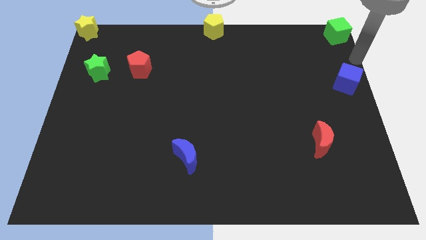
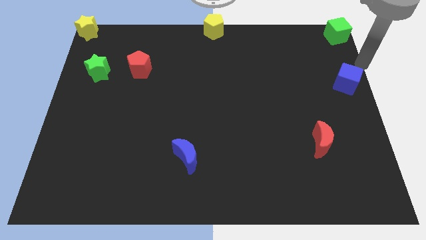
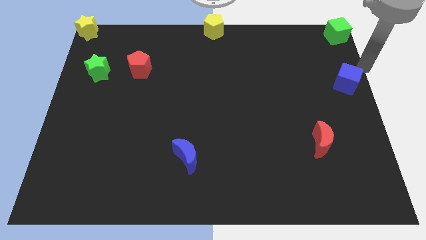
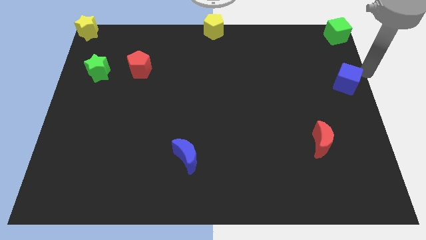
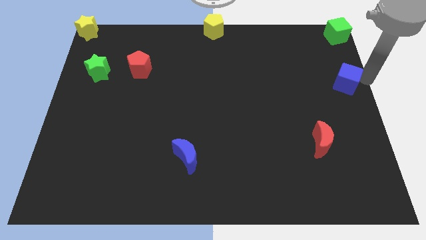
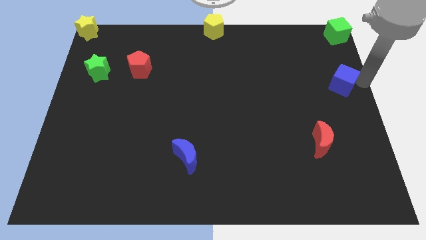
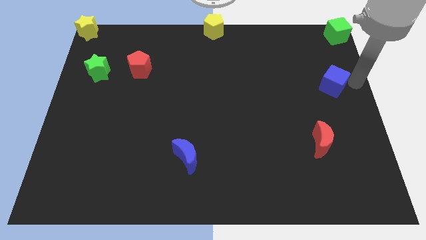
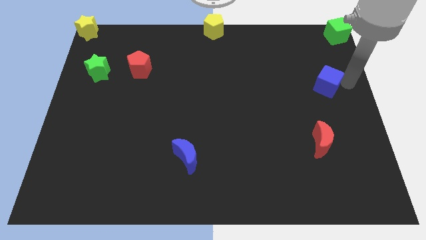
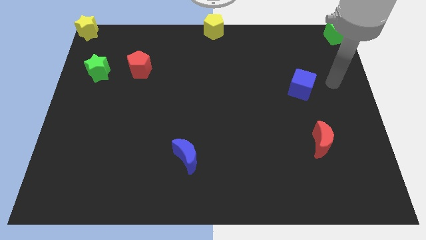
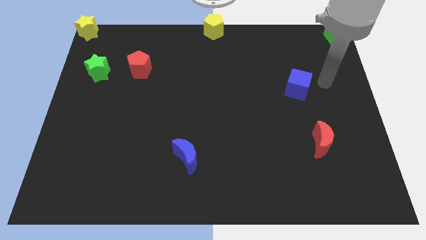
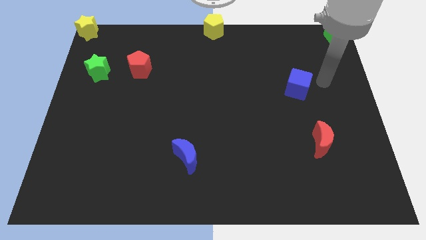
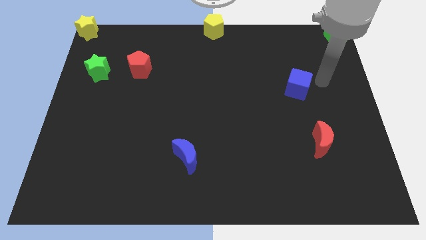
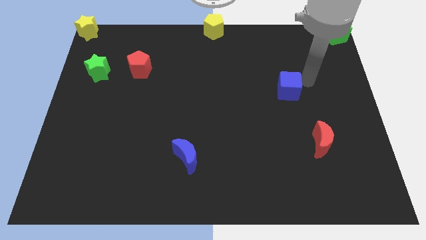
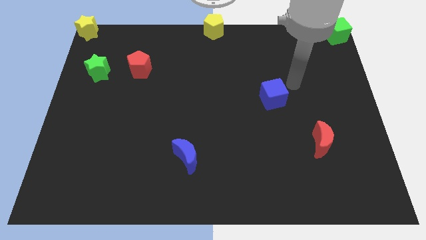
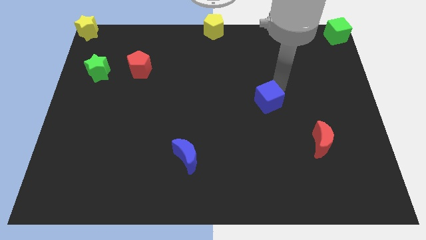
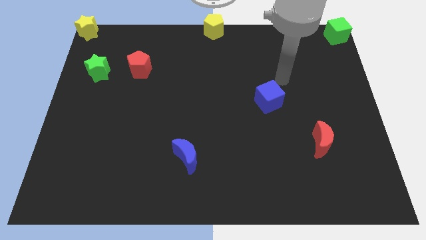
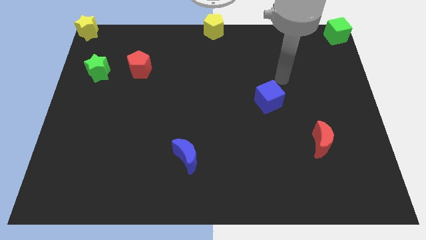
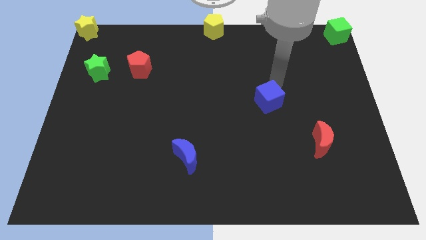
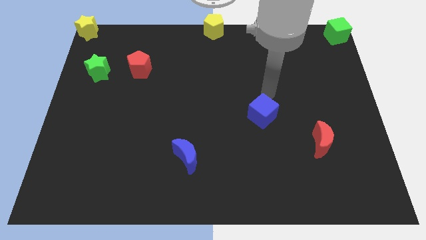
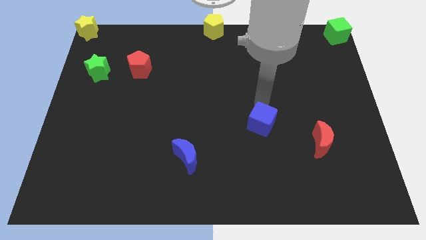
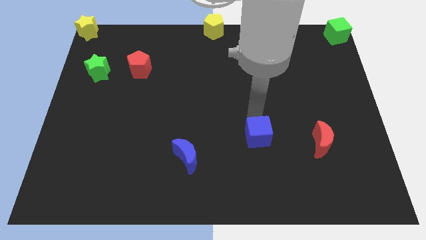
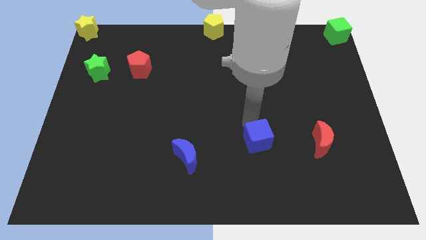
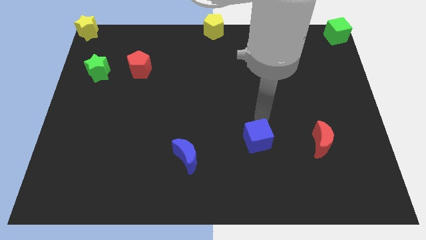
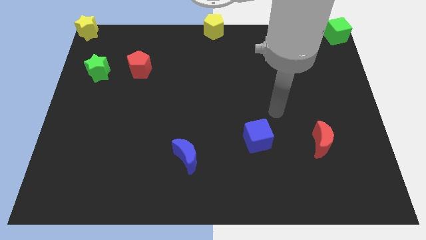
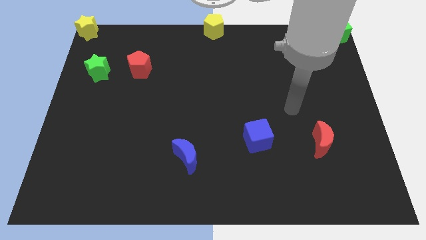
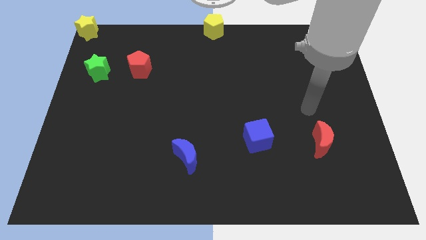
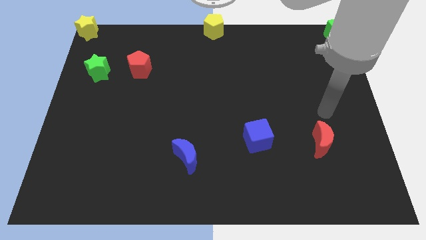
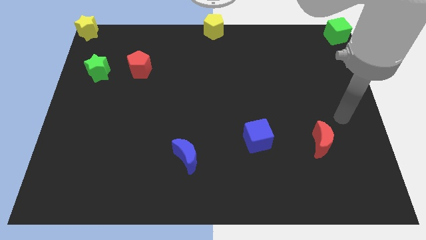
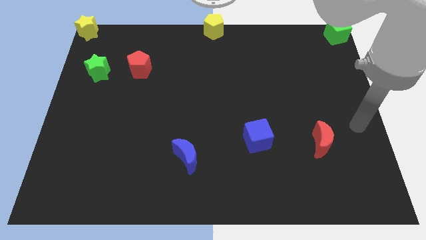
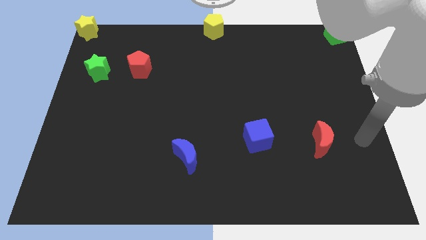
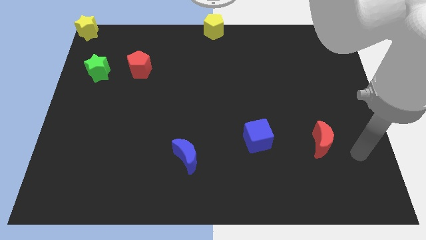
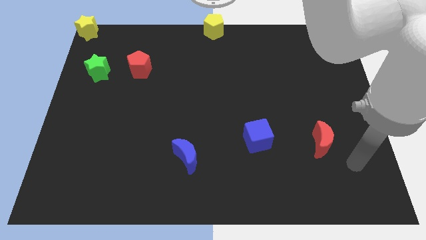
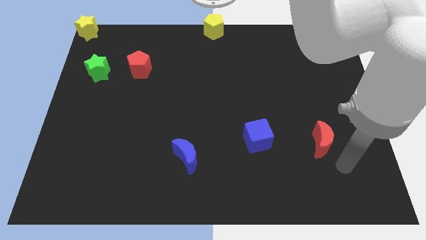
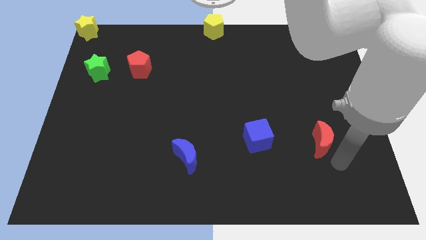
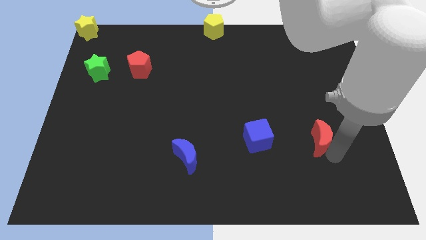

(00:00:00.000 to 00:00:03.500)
place the blue cube in between the red crescent and blue crescent

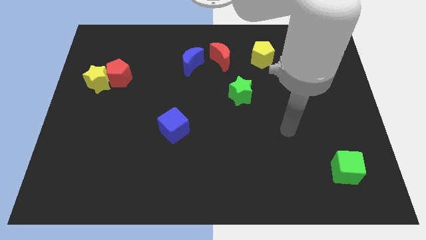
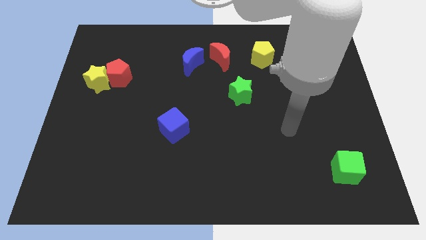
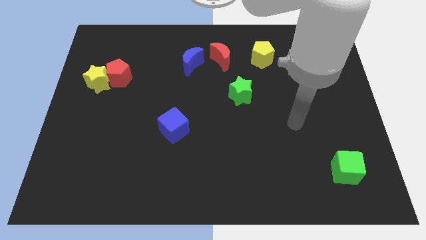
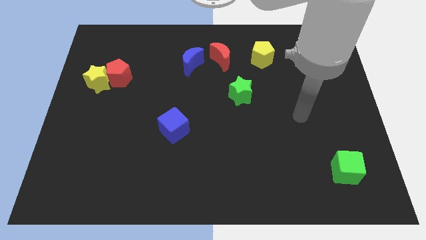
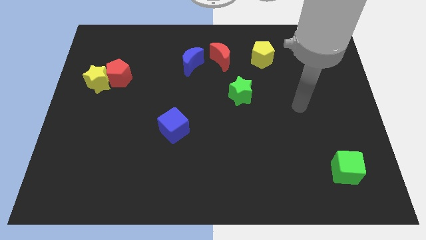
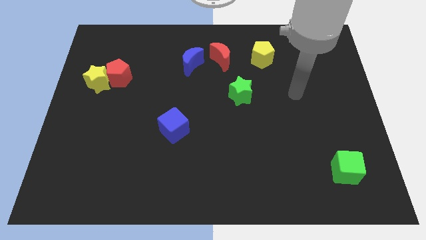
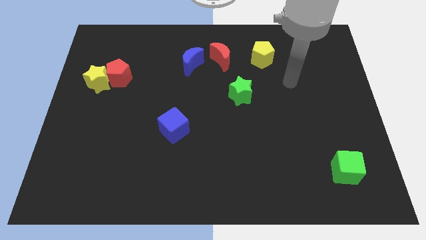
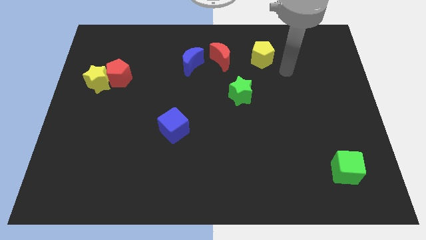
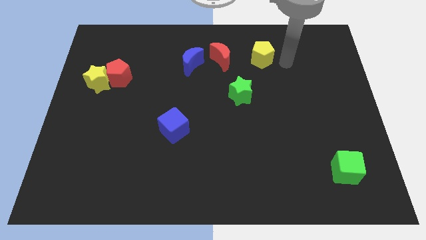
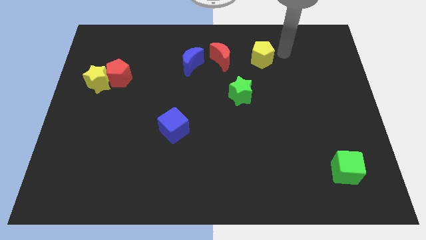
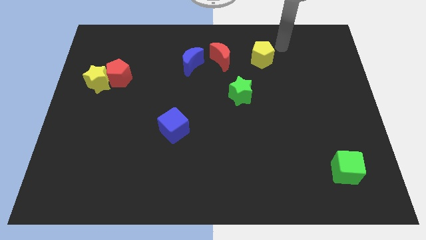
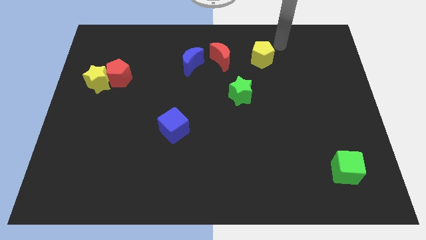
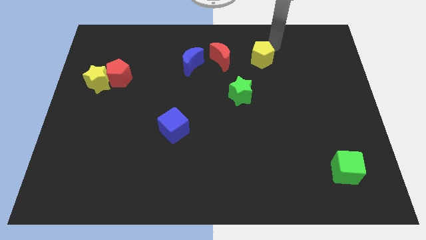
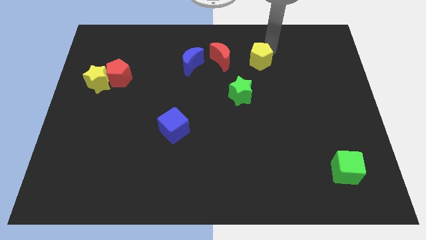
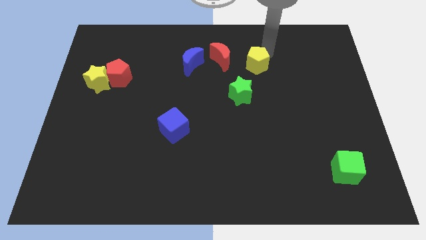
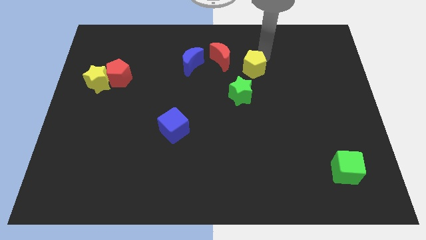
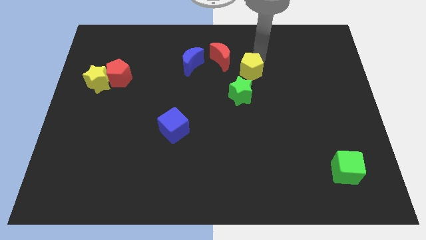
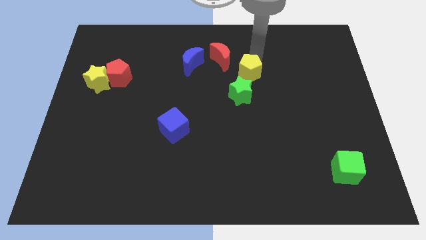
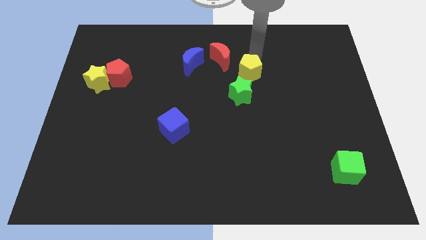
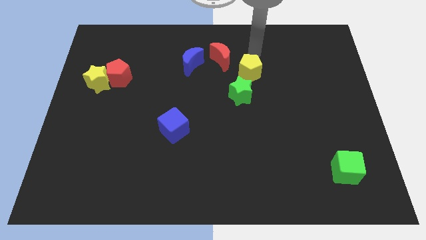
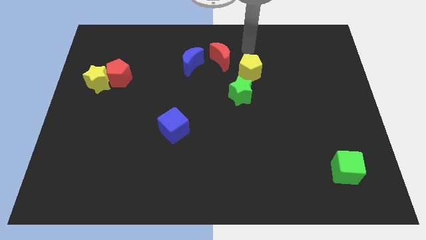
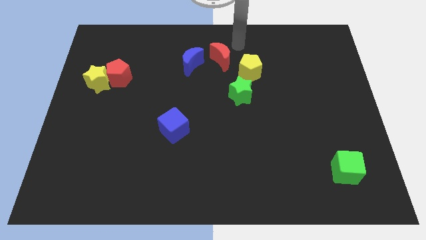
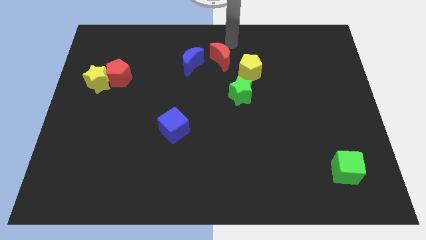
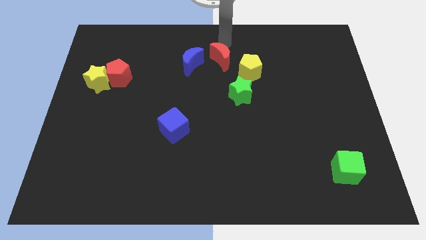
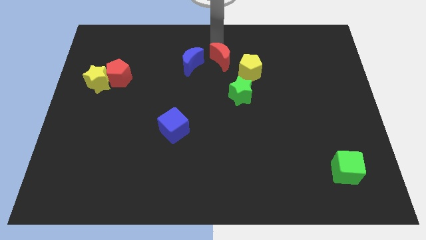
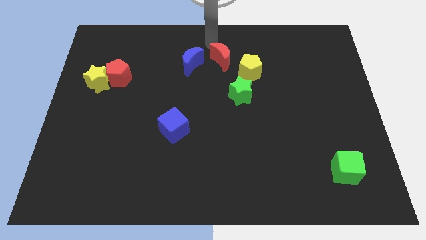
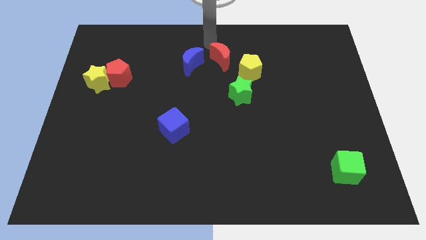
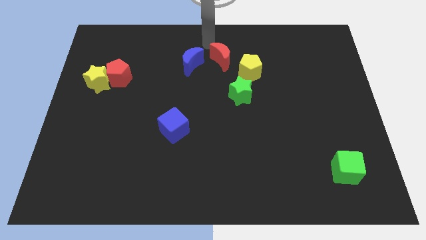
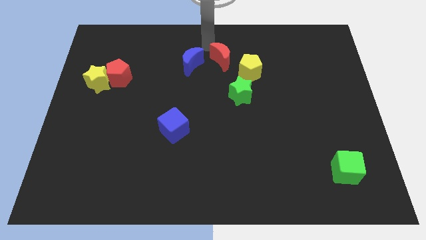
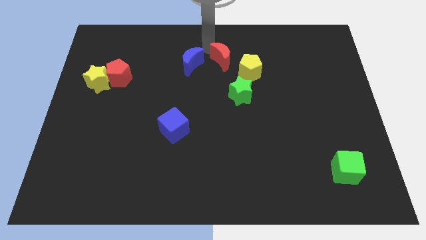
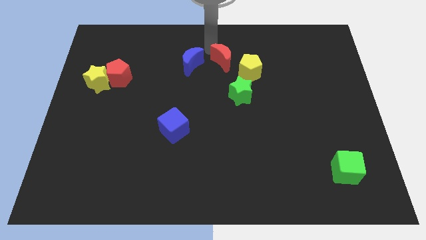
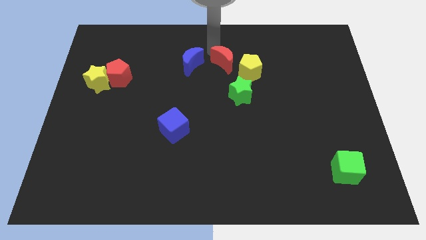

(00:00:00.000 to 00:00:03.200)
move yellow pentagon near green star

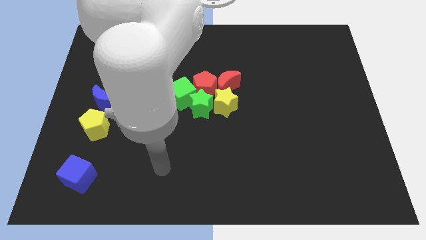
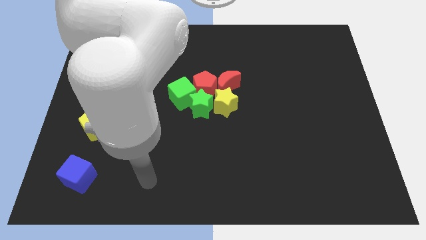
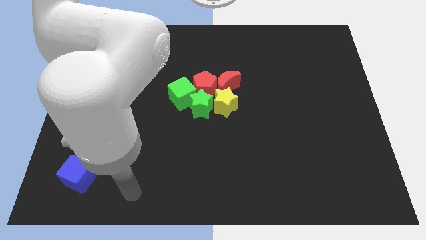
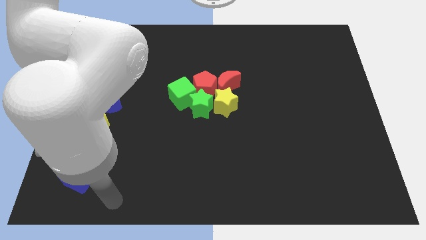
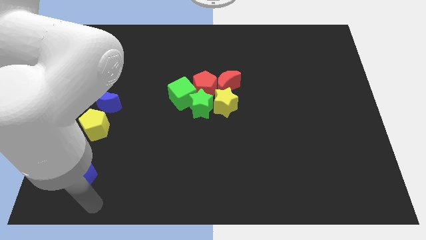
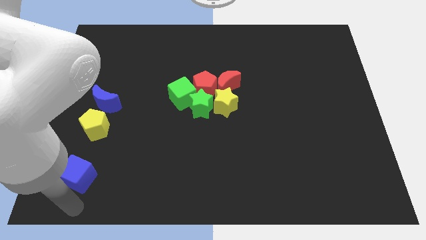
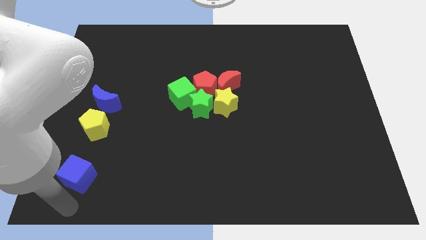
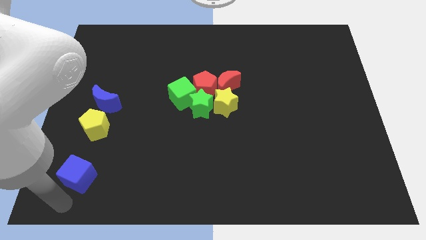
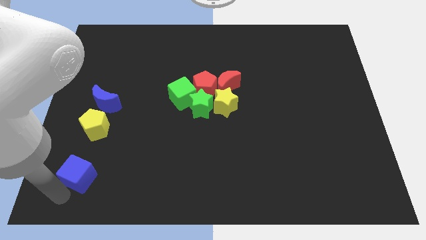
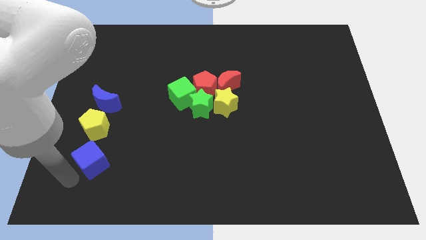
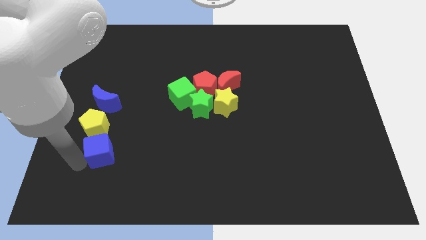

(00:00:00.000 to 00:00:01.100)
move the blue cube to the bottom of the yellow pentagon

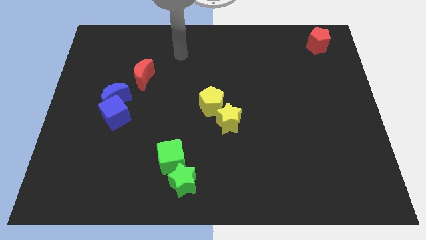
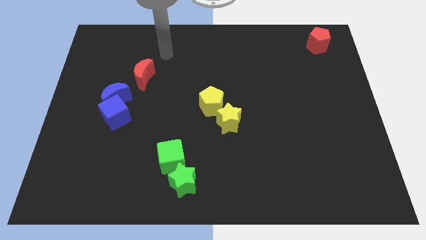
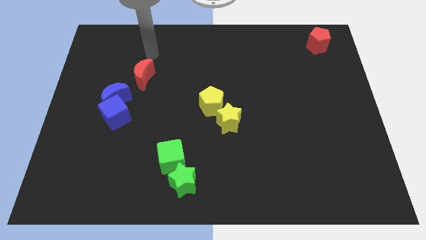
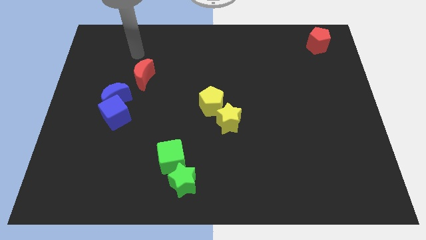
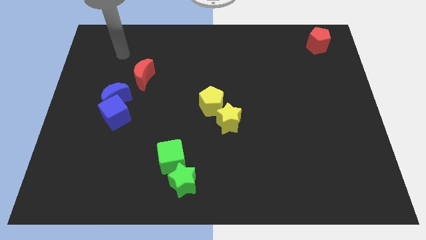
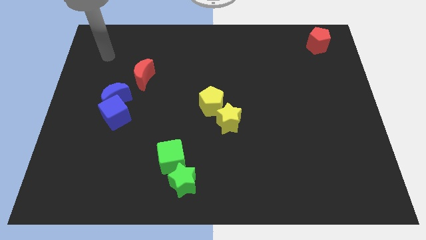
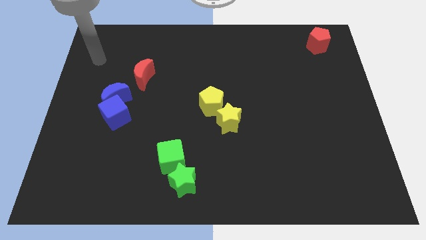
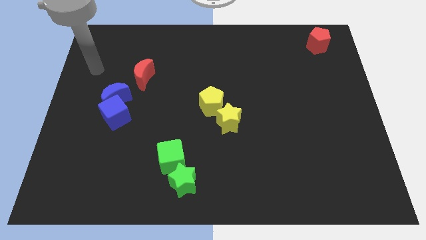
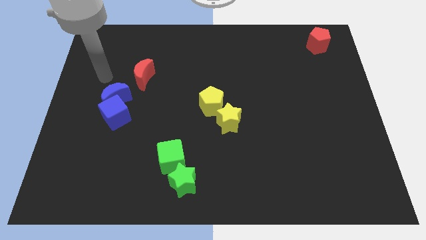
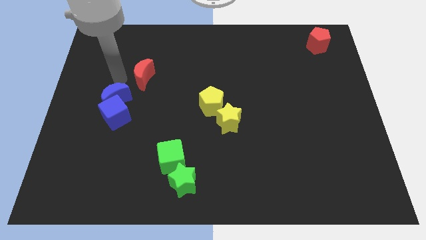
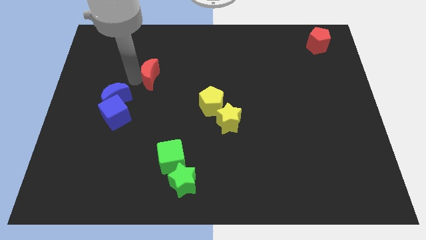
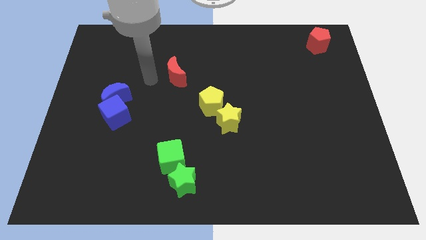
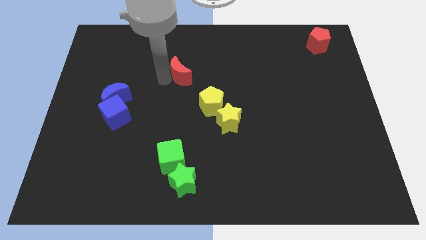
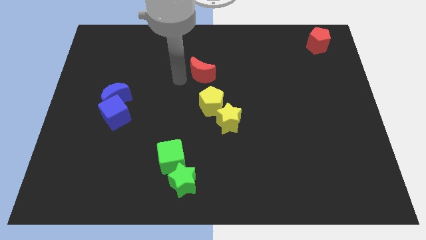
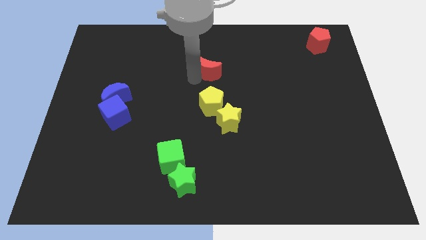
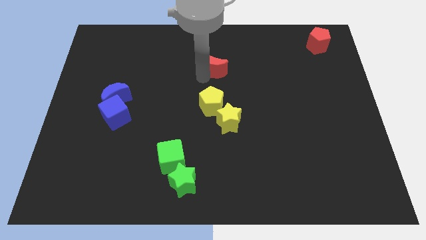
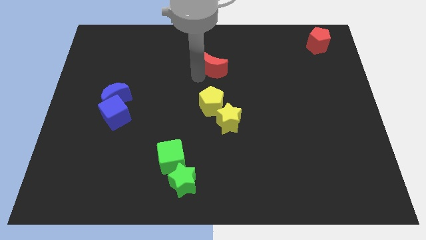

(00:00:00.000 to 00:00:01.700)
push the red moon above the yellow pentagon
